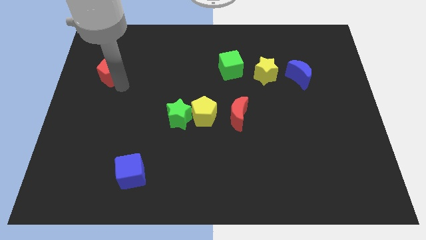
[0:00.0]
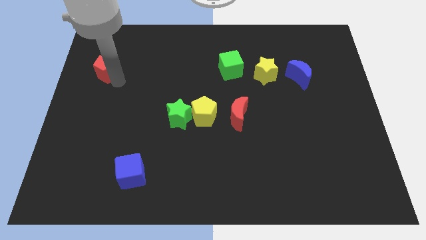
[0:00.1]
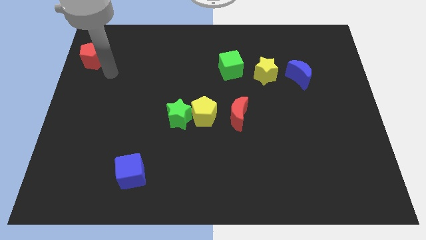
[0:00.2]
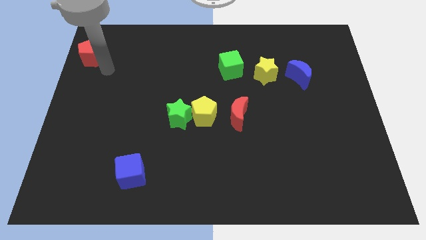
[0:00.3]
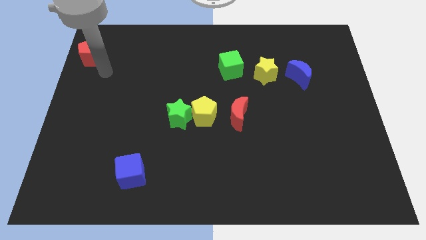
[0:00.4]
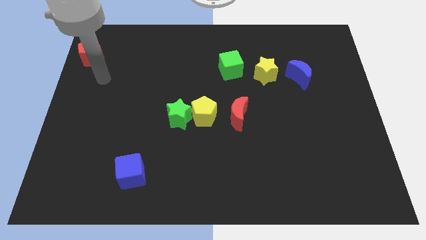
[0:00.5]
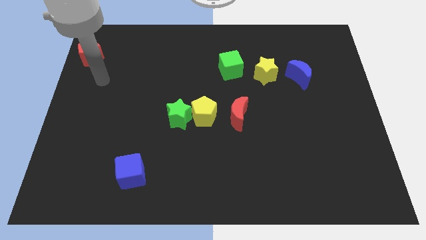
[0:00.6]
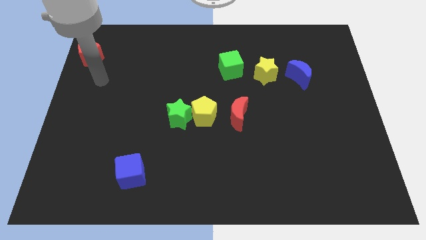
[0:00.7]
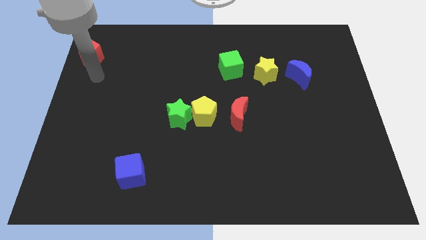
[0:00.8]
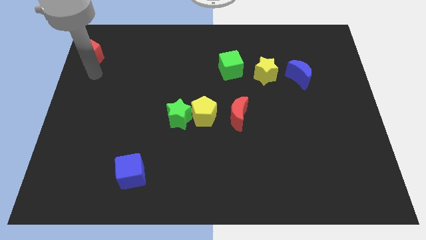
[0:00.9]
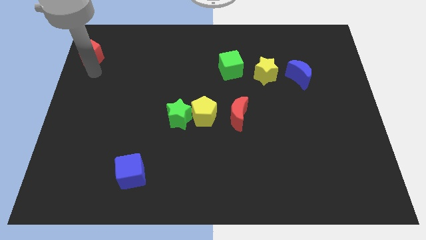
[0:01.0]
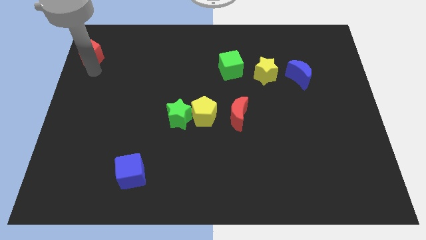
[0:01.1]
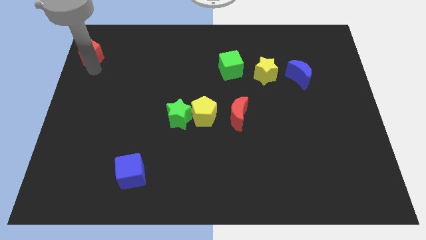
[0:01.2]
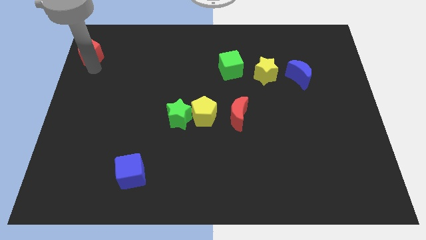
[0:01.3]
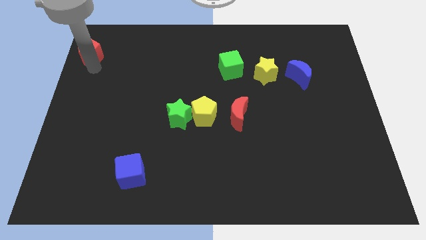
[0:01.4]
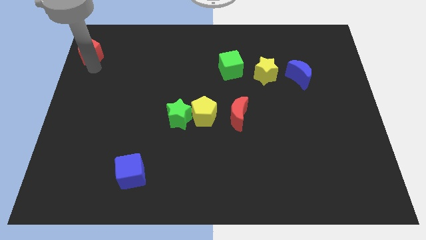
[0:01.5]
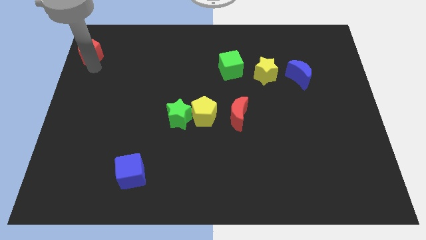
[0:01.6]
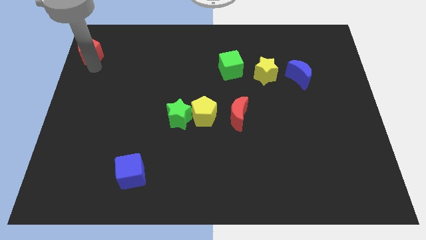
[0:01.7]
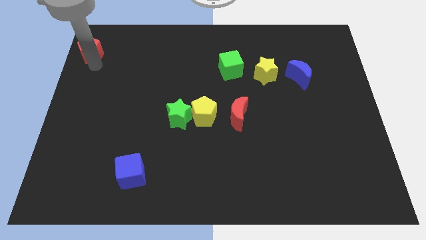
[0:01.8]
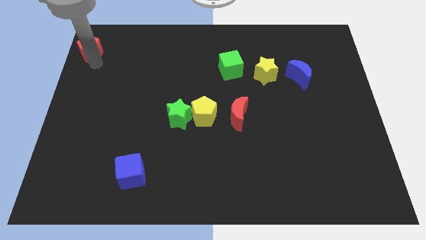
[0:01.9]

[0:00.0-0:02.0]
move the red pentagon to the top left corner

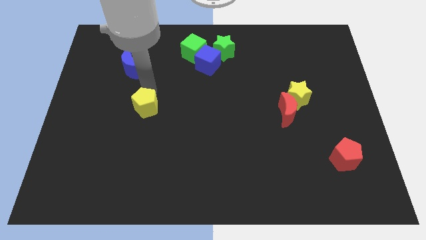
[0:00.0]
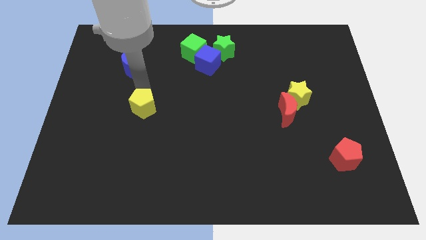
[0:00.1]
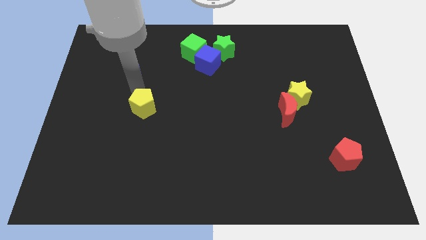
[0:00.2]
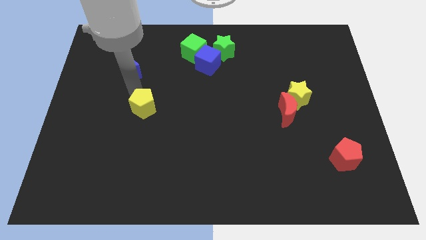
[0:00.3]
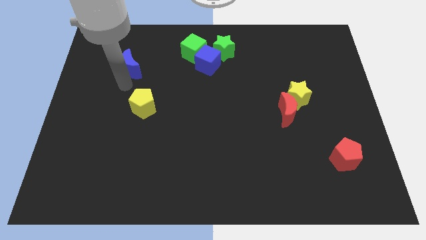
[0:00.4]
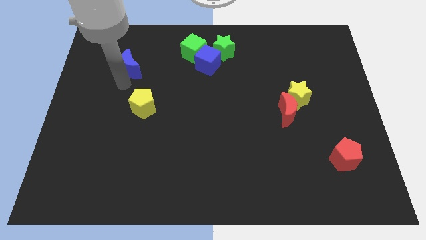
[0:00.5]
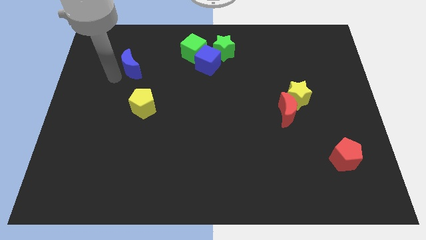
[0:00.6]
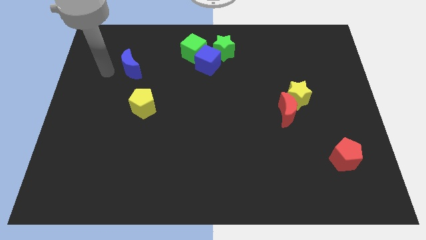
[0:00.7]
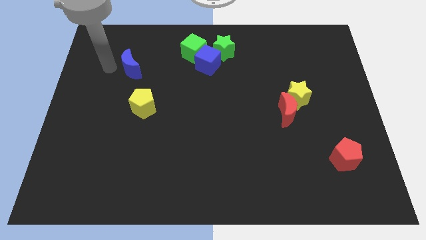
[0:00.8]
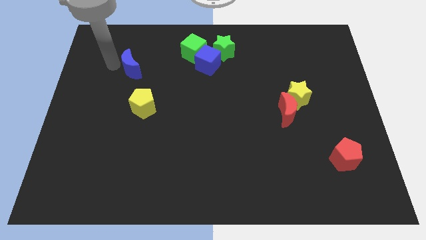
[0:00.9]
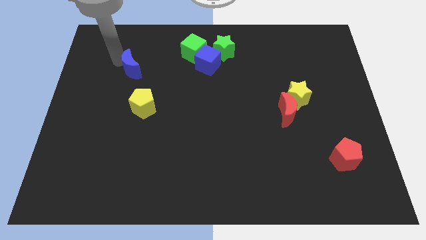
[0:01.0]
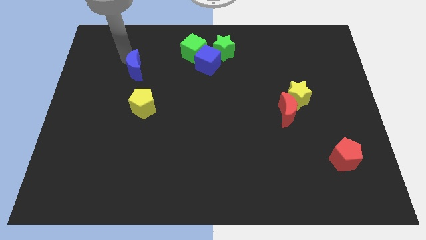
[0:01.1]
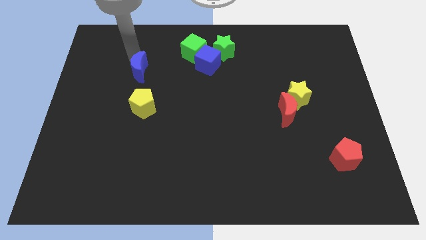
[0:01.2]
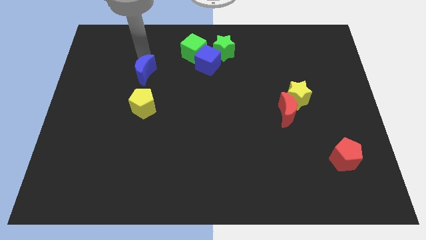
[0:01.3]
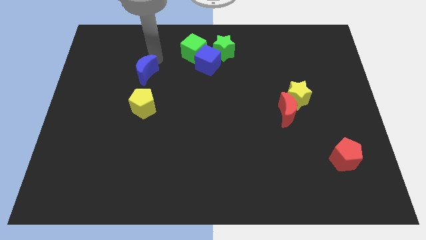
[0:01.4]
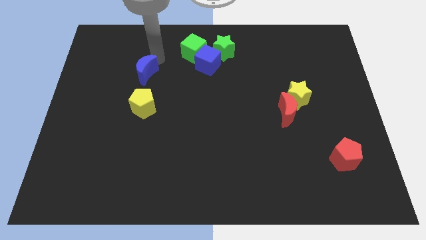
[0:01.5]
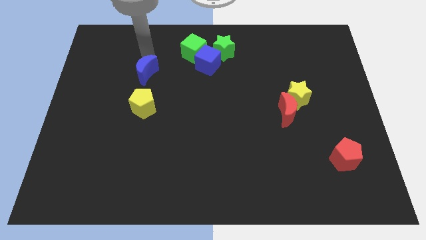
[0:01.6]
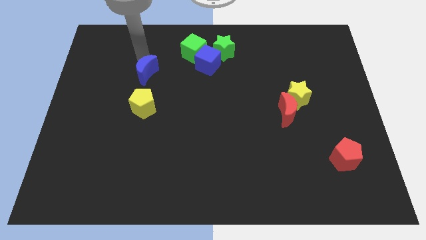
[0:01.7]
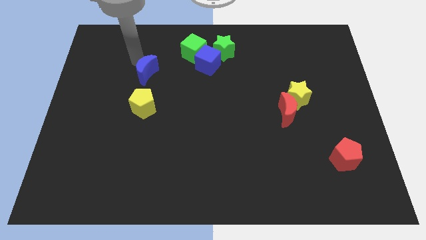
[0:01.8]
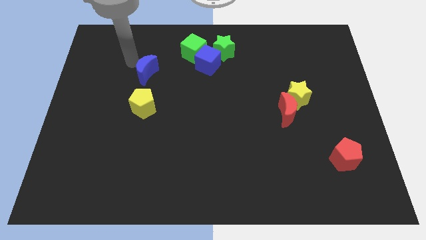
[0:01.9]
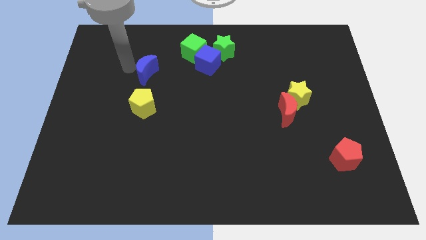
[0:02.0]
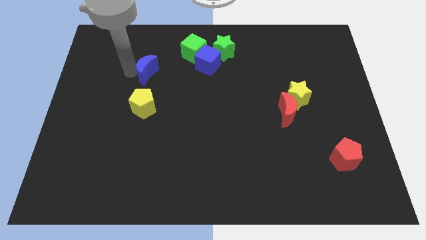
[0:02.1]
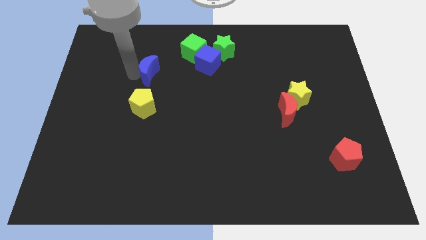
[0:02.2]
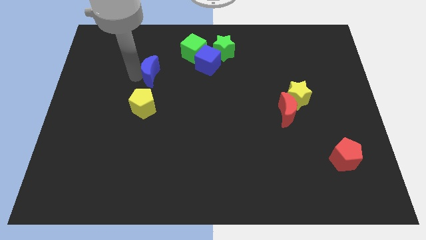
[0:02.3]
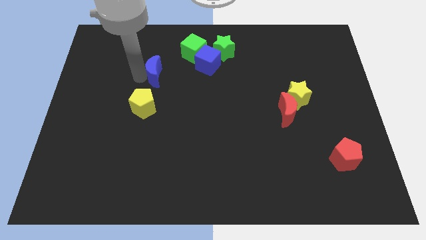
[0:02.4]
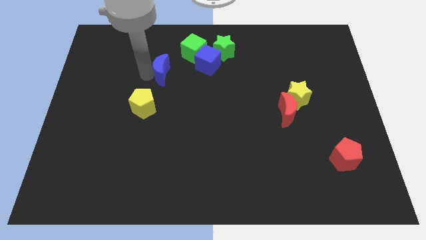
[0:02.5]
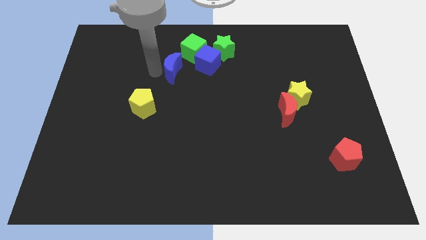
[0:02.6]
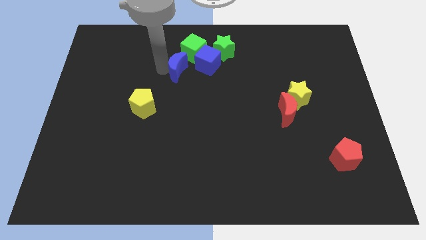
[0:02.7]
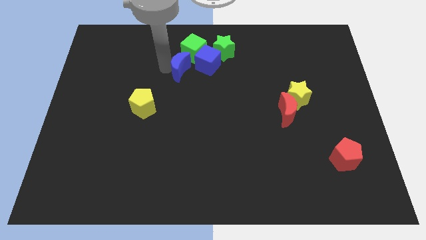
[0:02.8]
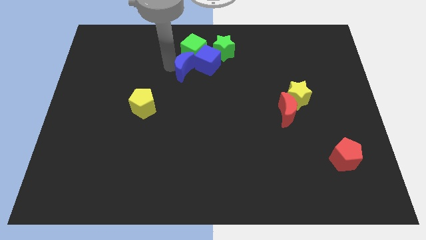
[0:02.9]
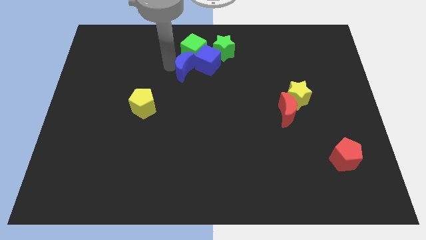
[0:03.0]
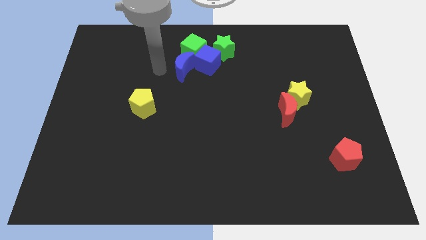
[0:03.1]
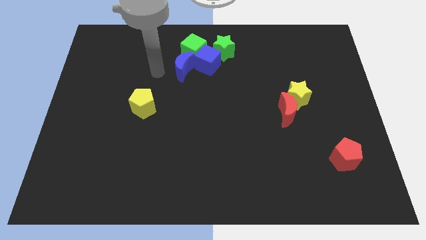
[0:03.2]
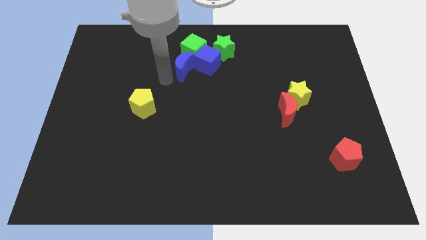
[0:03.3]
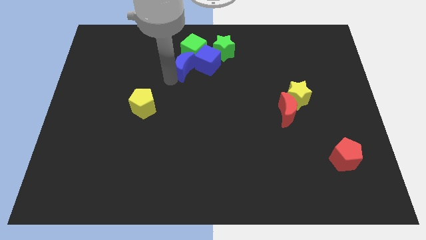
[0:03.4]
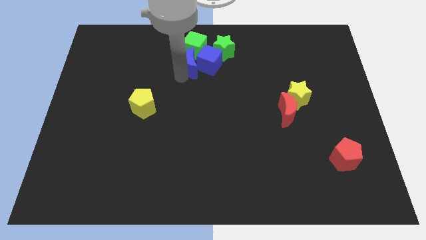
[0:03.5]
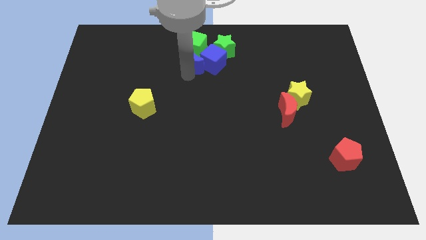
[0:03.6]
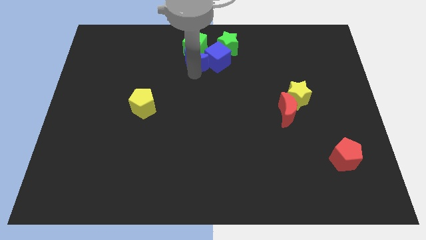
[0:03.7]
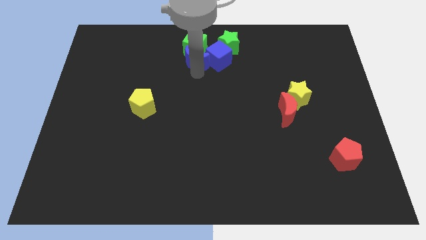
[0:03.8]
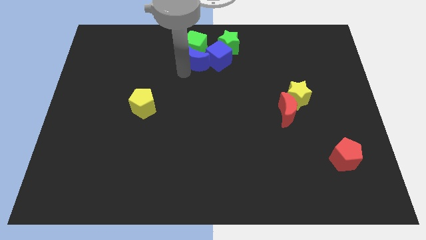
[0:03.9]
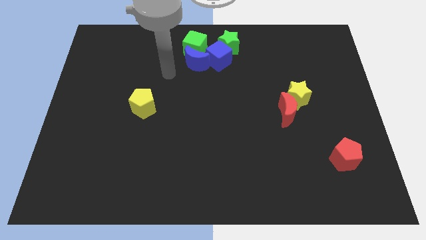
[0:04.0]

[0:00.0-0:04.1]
drag the blue moon close to the group of blocks

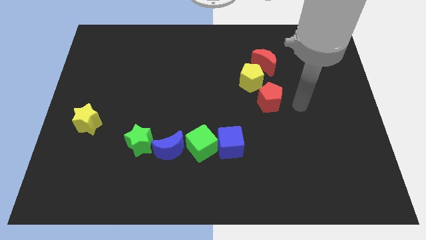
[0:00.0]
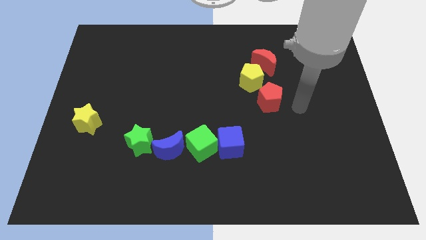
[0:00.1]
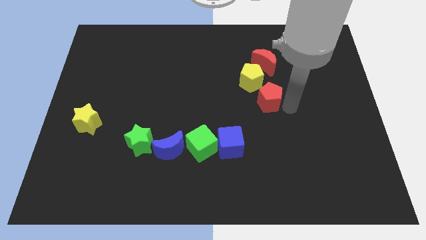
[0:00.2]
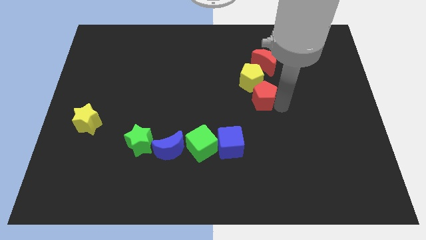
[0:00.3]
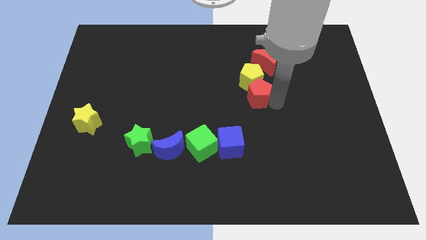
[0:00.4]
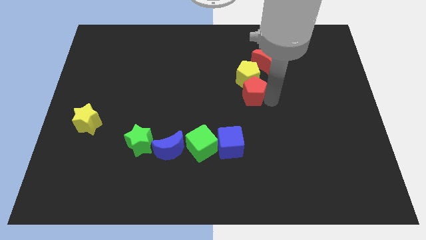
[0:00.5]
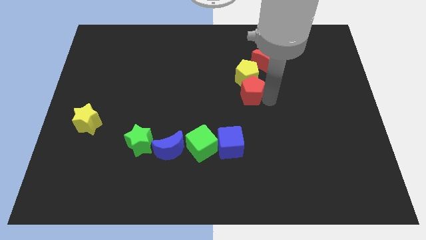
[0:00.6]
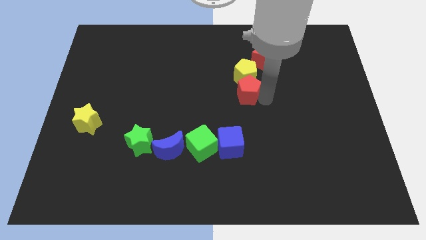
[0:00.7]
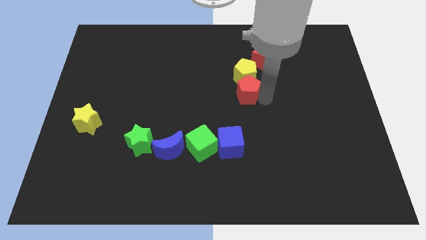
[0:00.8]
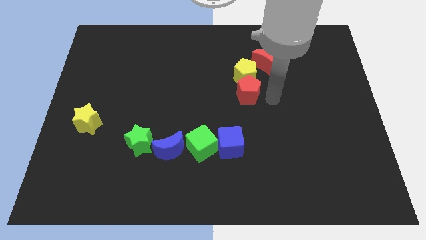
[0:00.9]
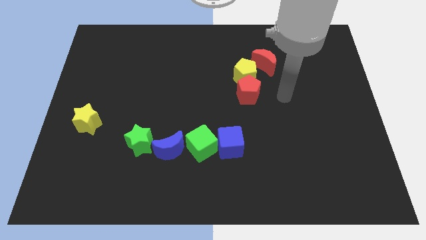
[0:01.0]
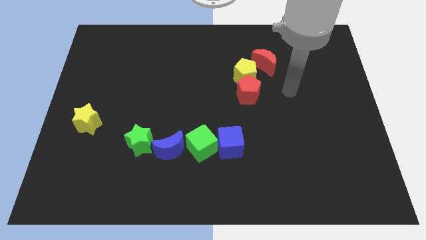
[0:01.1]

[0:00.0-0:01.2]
move red pentagon into yellow pentagon

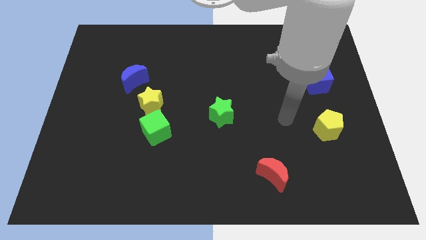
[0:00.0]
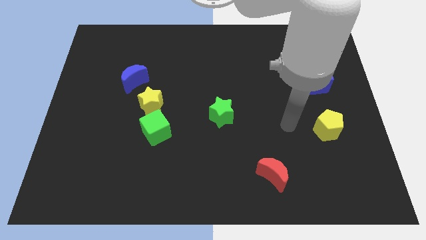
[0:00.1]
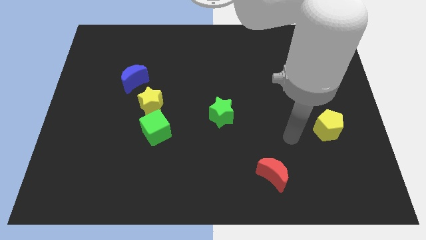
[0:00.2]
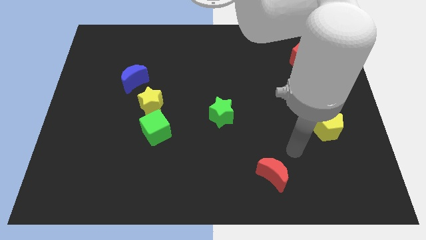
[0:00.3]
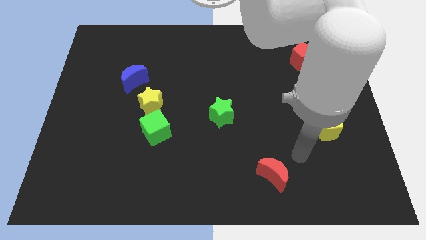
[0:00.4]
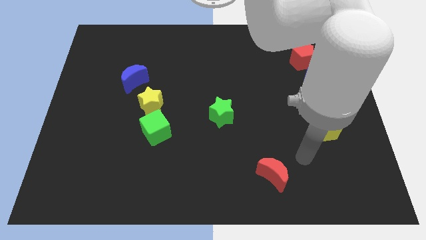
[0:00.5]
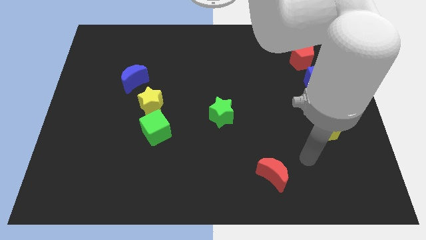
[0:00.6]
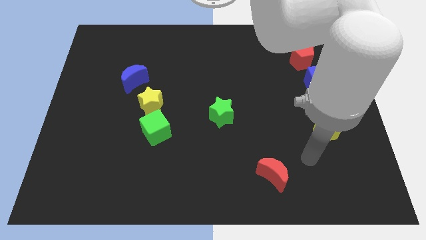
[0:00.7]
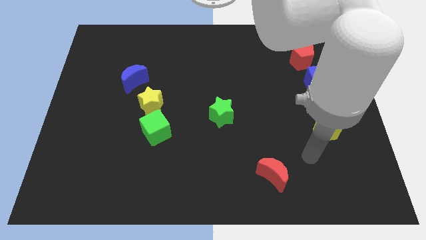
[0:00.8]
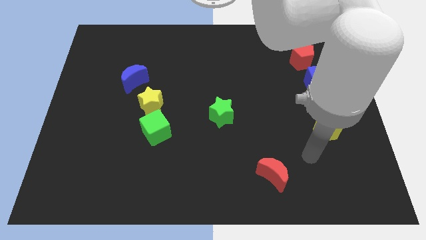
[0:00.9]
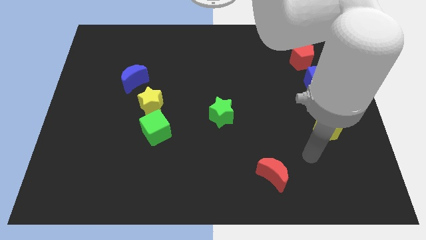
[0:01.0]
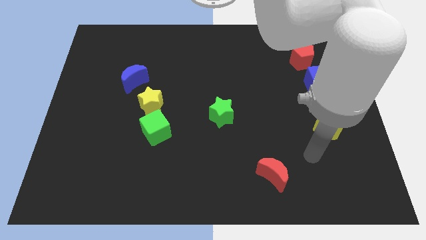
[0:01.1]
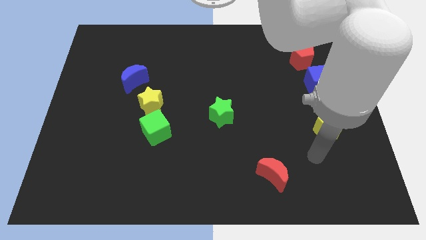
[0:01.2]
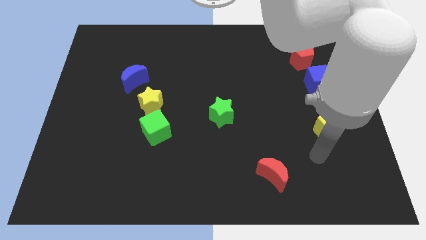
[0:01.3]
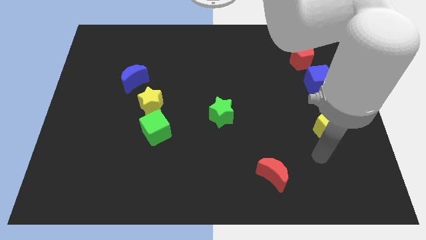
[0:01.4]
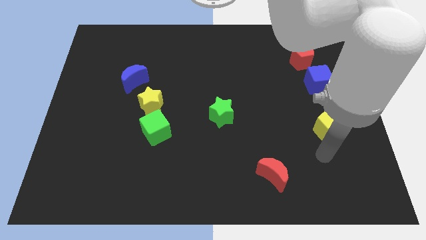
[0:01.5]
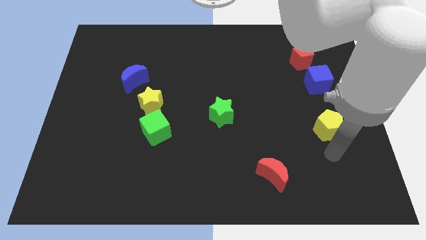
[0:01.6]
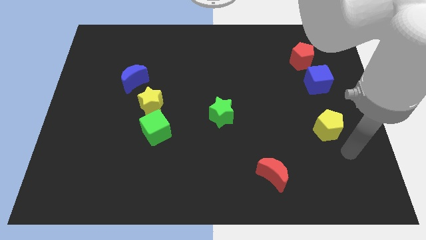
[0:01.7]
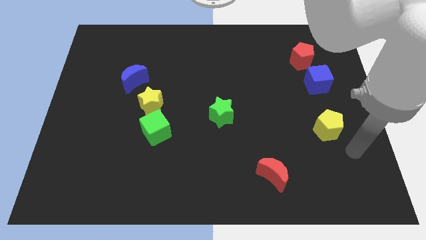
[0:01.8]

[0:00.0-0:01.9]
point your arm below the yellow pentagon
